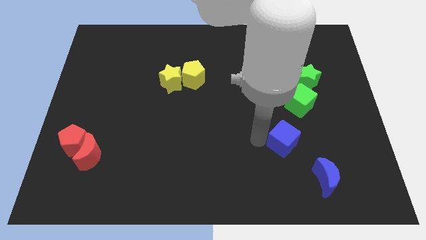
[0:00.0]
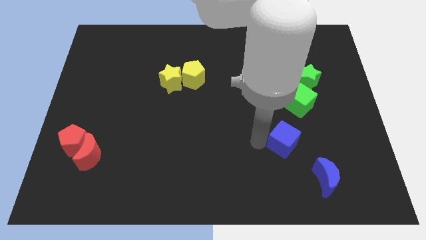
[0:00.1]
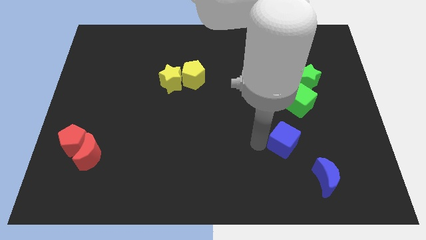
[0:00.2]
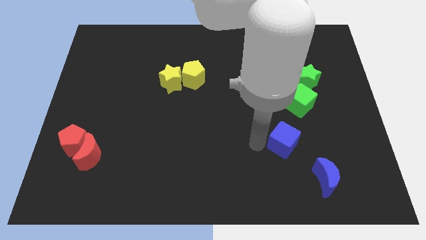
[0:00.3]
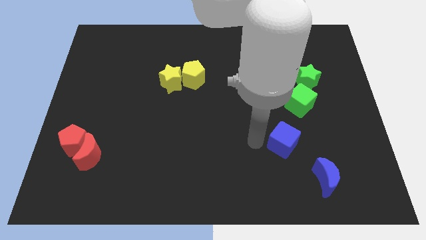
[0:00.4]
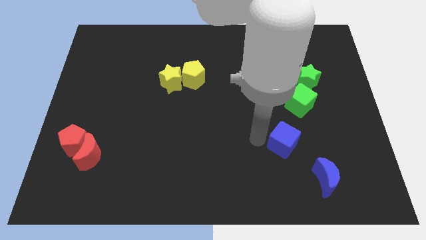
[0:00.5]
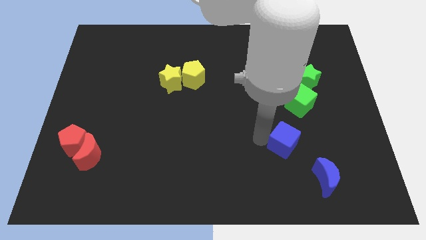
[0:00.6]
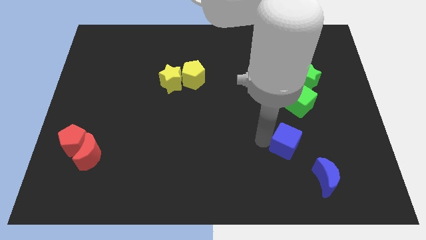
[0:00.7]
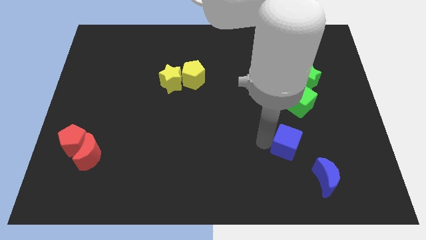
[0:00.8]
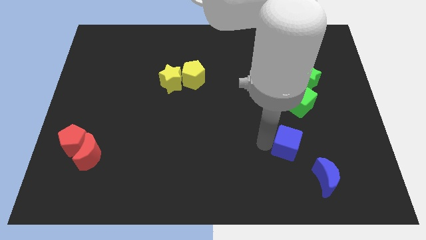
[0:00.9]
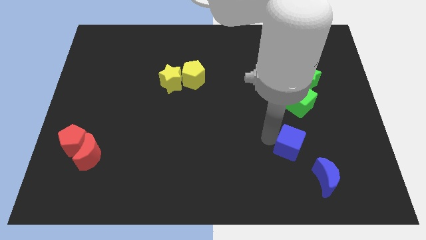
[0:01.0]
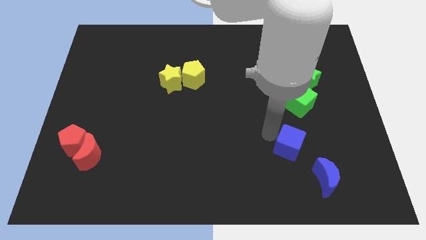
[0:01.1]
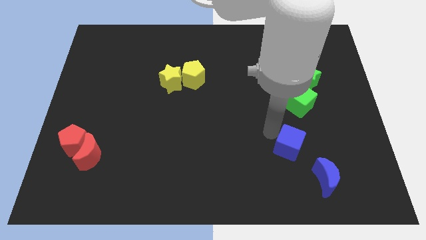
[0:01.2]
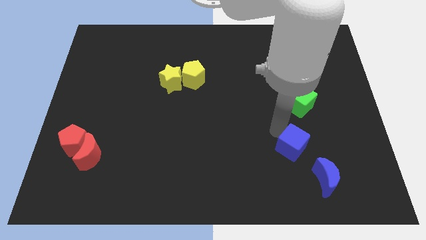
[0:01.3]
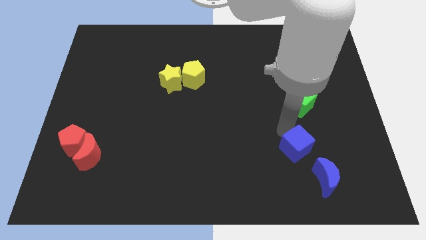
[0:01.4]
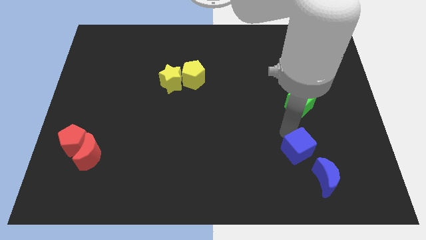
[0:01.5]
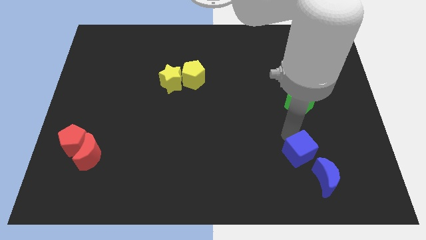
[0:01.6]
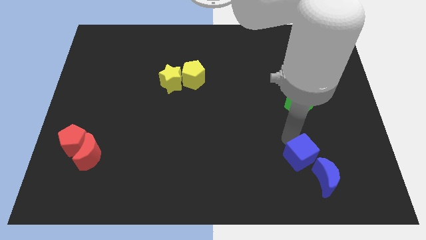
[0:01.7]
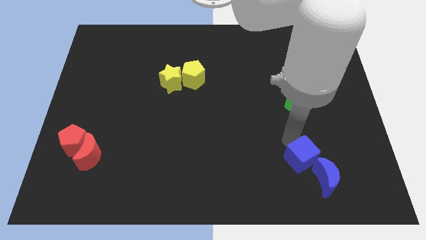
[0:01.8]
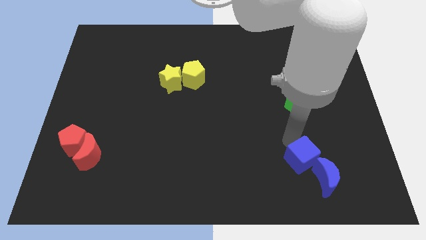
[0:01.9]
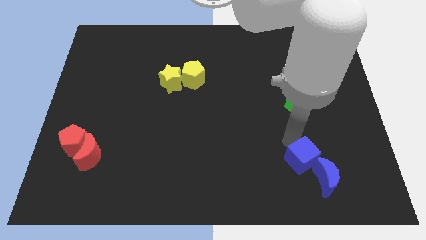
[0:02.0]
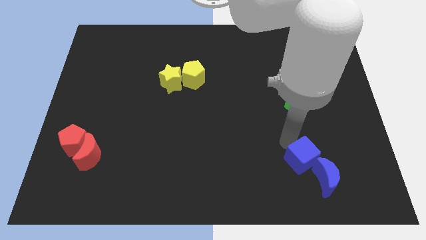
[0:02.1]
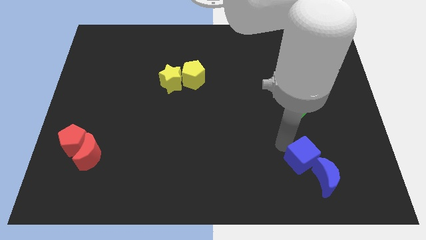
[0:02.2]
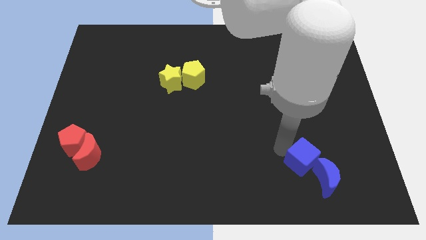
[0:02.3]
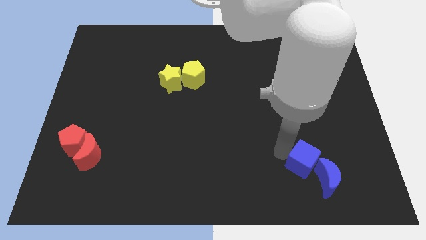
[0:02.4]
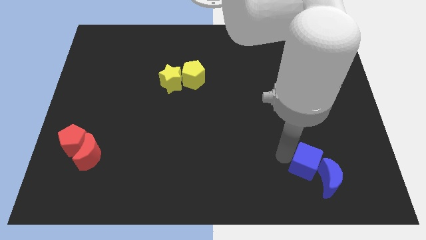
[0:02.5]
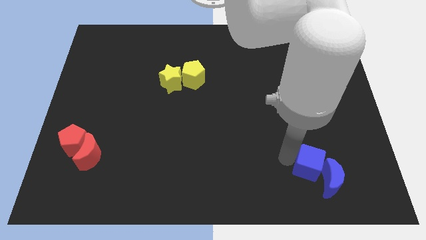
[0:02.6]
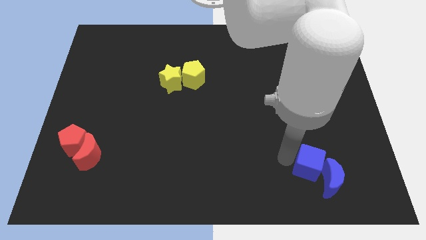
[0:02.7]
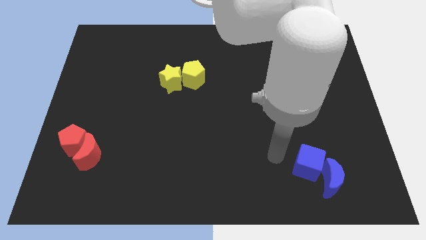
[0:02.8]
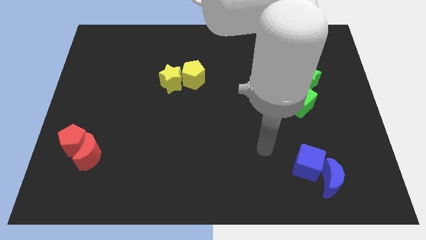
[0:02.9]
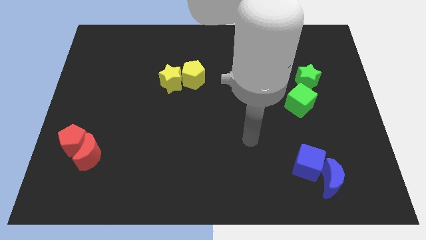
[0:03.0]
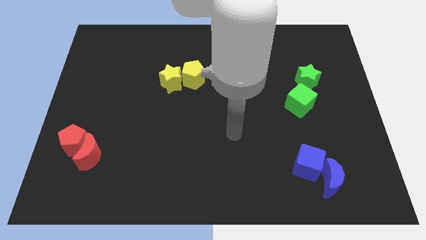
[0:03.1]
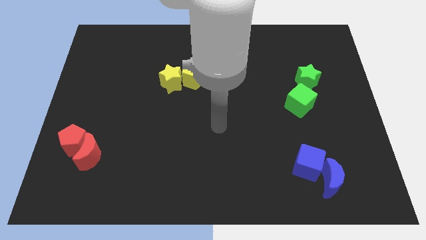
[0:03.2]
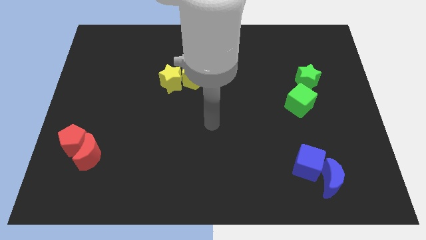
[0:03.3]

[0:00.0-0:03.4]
move the blue cube left above the blue moon

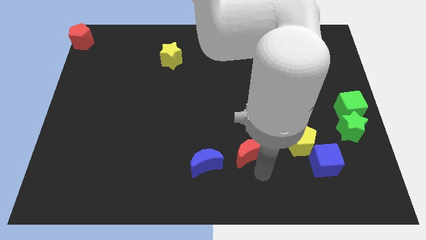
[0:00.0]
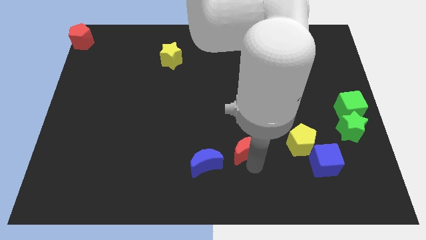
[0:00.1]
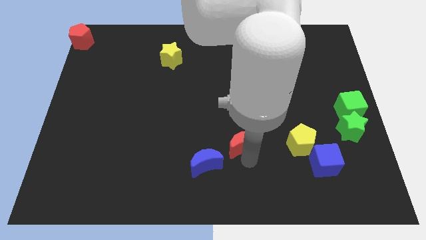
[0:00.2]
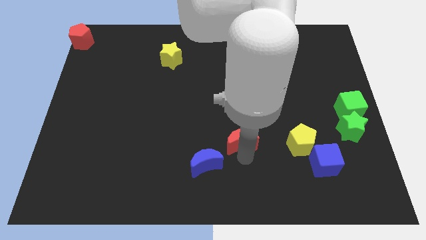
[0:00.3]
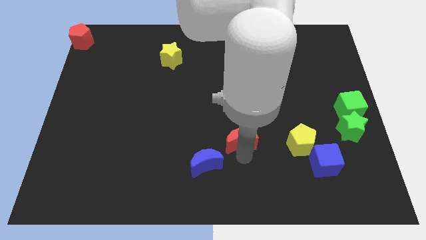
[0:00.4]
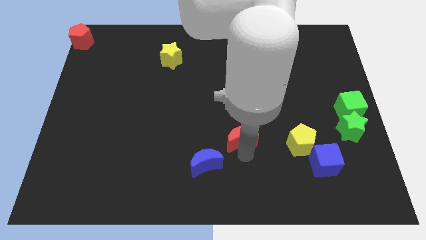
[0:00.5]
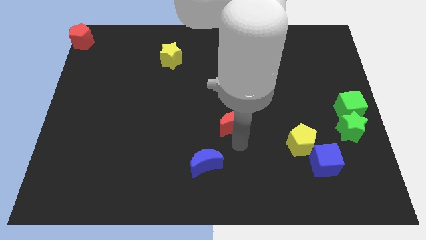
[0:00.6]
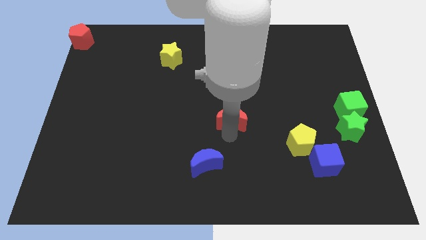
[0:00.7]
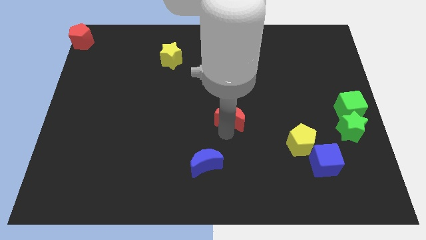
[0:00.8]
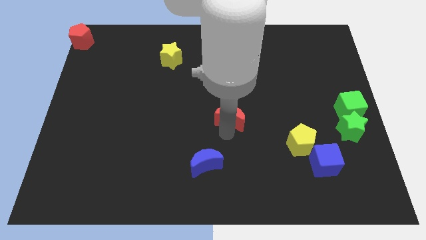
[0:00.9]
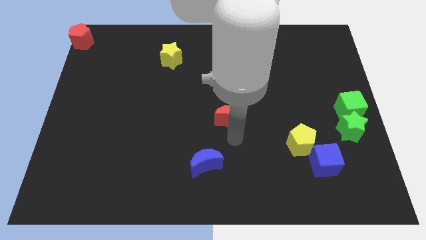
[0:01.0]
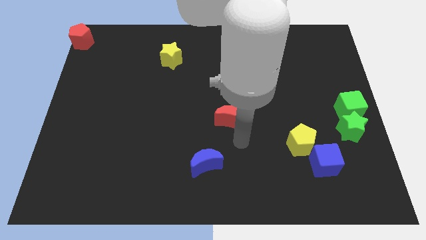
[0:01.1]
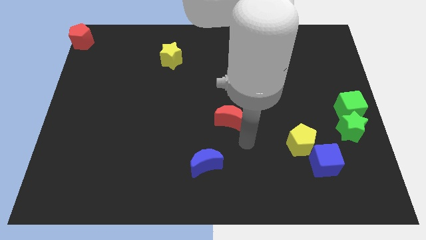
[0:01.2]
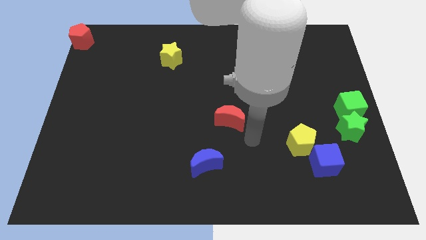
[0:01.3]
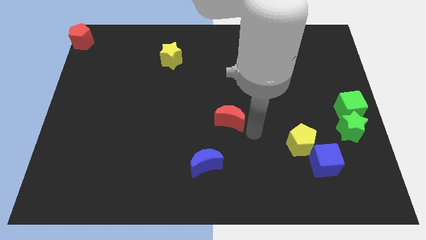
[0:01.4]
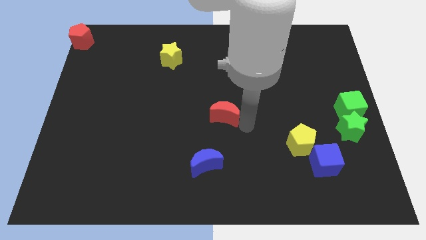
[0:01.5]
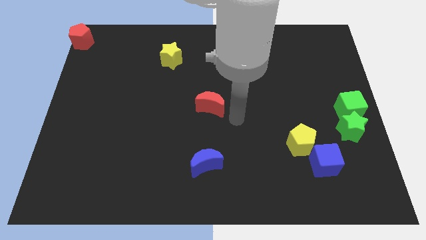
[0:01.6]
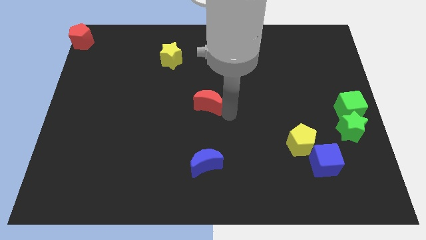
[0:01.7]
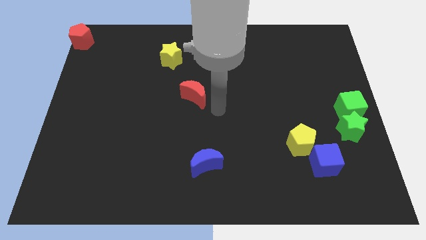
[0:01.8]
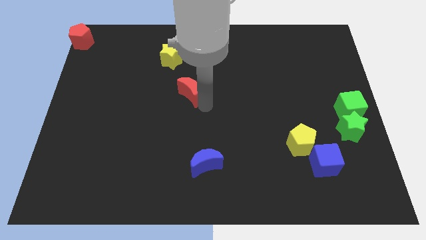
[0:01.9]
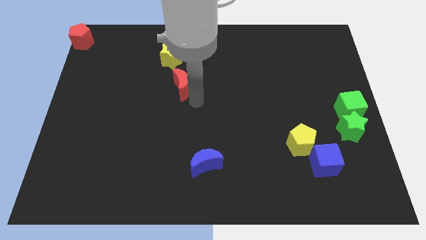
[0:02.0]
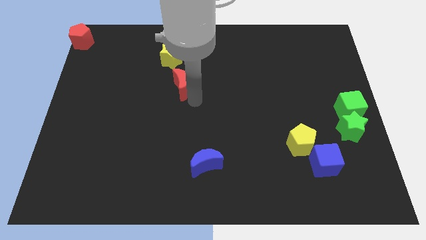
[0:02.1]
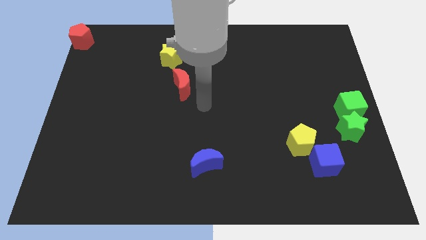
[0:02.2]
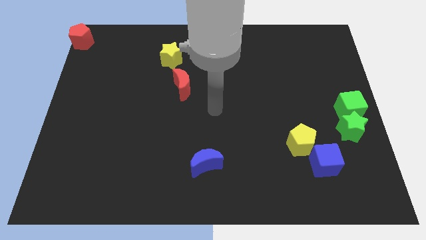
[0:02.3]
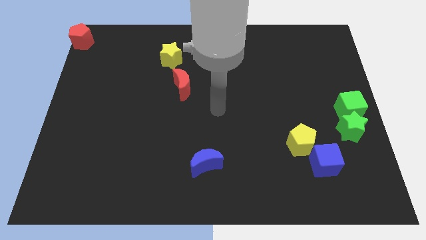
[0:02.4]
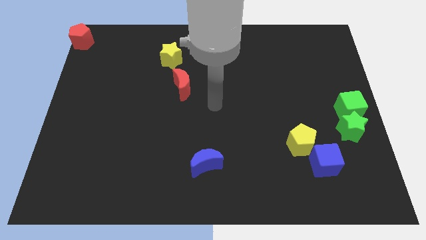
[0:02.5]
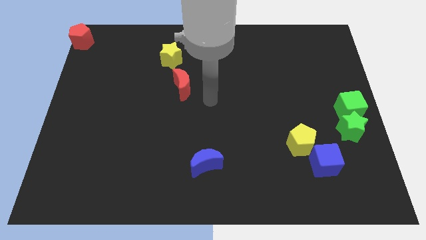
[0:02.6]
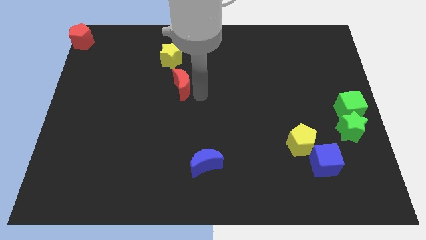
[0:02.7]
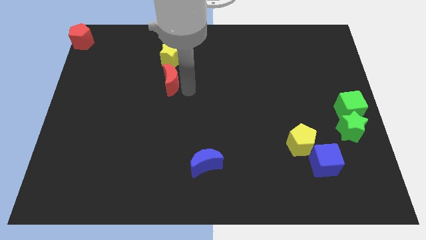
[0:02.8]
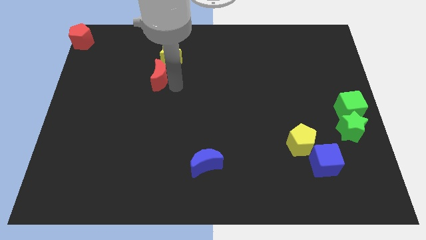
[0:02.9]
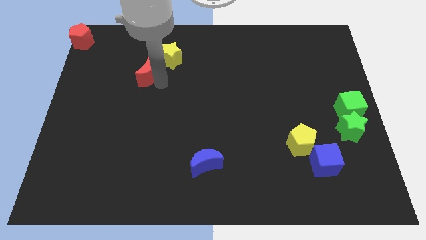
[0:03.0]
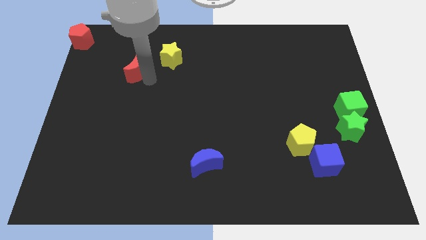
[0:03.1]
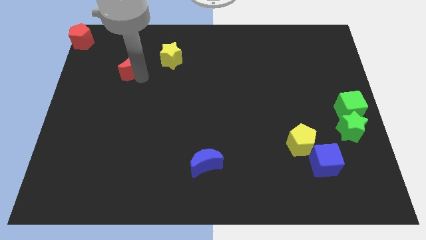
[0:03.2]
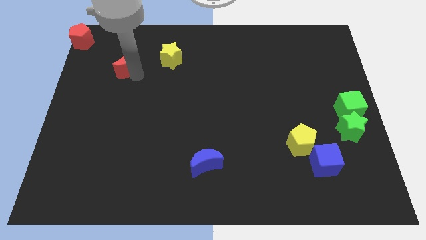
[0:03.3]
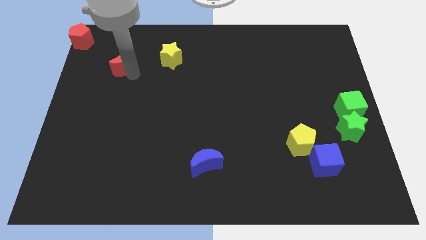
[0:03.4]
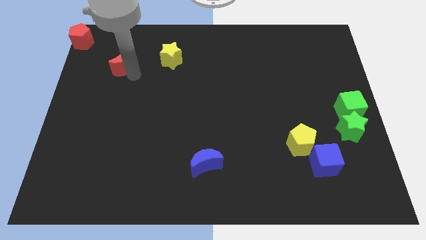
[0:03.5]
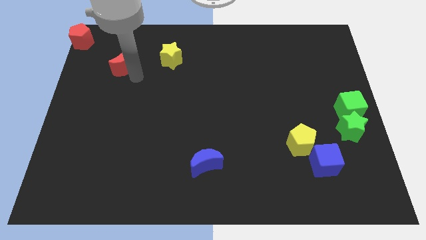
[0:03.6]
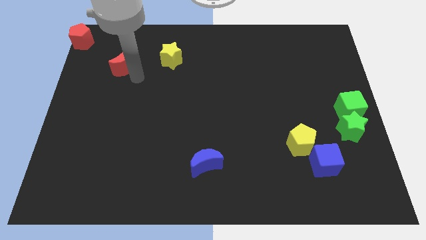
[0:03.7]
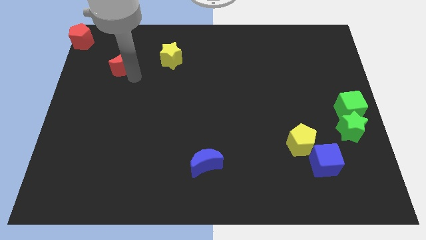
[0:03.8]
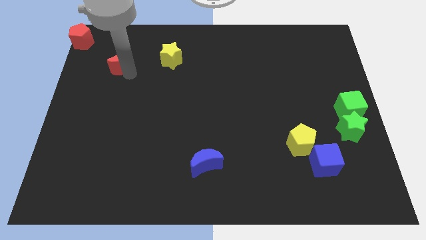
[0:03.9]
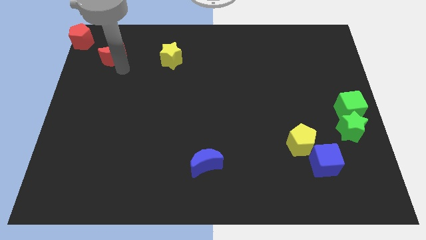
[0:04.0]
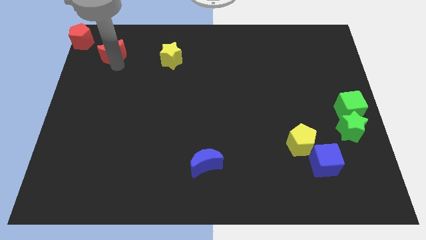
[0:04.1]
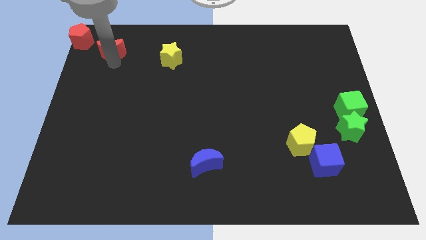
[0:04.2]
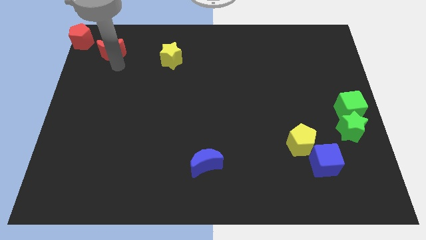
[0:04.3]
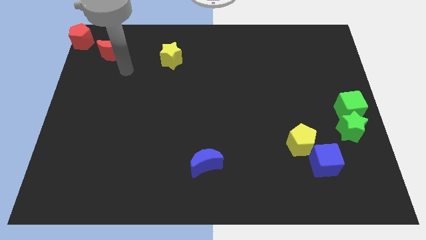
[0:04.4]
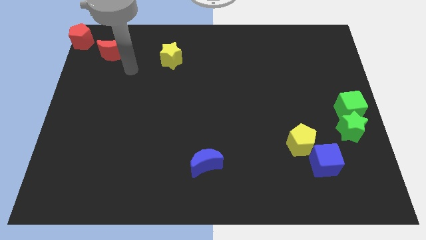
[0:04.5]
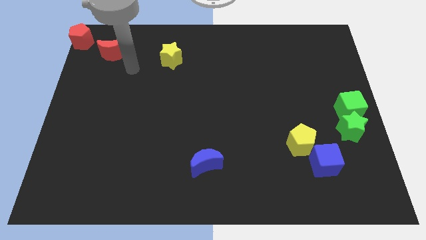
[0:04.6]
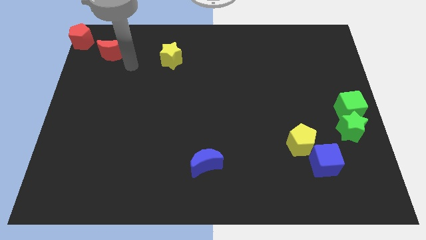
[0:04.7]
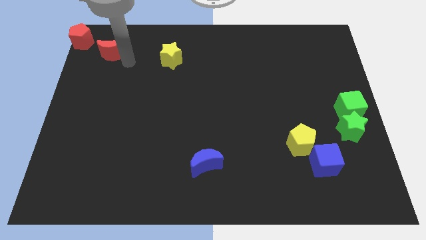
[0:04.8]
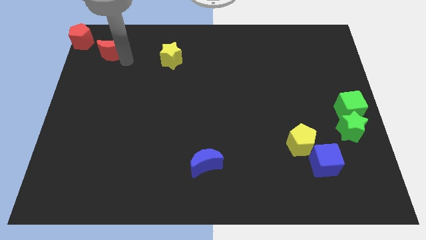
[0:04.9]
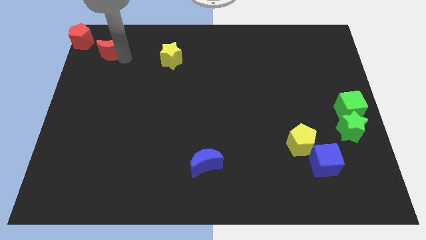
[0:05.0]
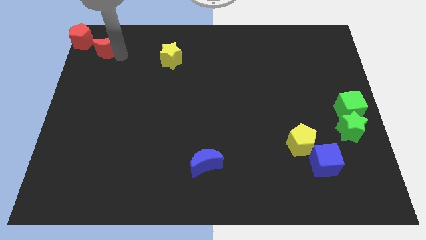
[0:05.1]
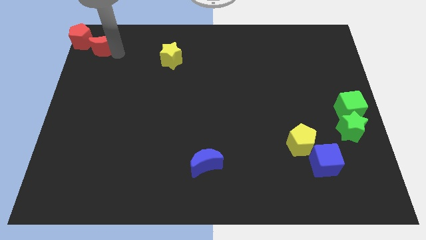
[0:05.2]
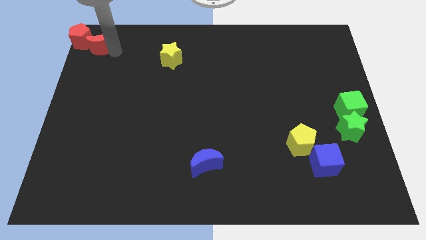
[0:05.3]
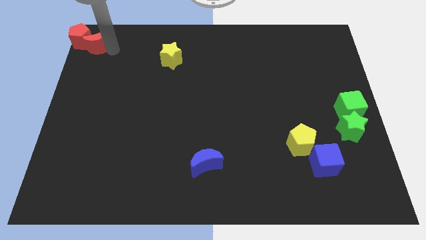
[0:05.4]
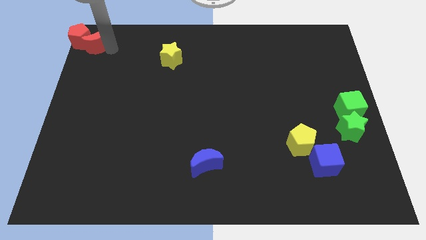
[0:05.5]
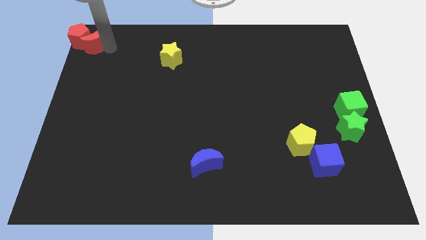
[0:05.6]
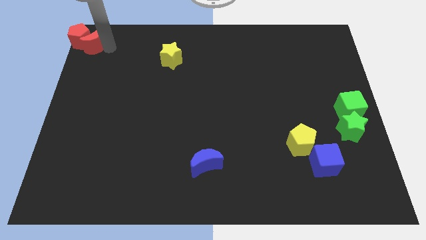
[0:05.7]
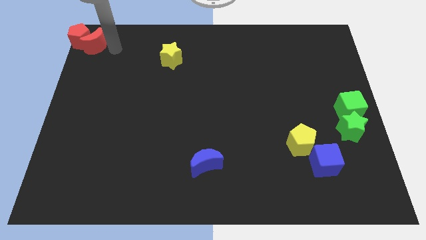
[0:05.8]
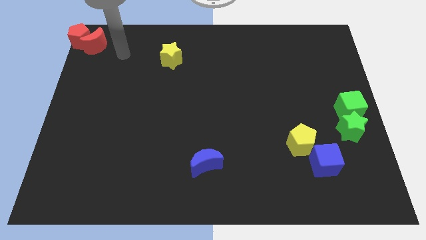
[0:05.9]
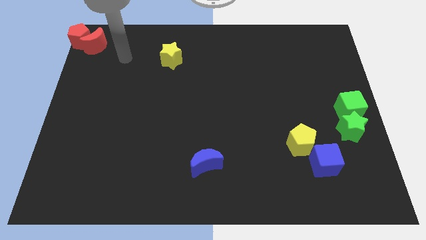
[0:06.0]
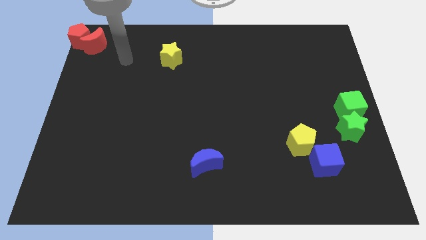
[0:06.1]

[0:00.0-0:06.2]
push the red crescent beside to the red pentagon to the top left corner of the board
